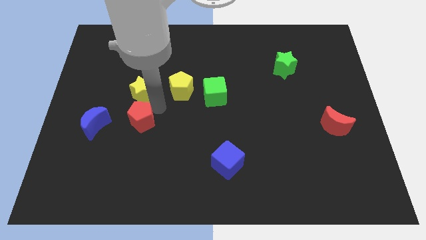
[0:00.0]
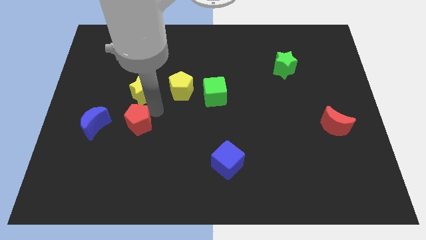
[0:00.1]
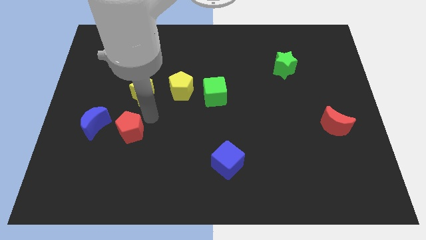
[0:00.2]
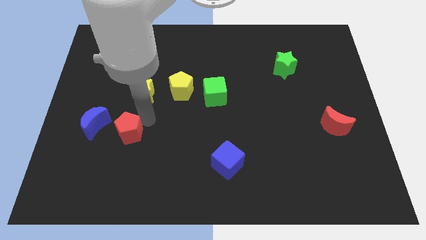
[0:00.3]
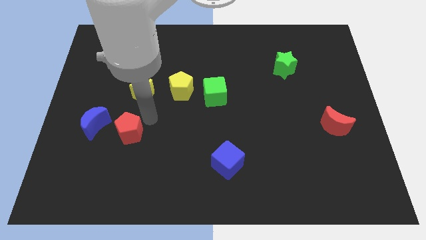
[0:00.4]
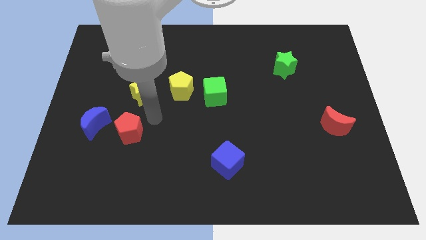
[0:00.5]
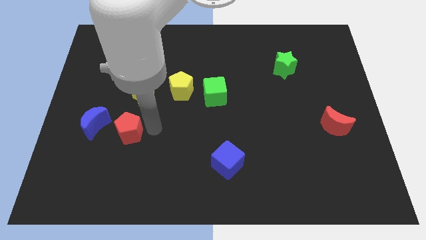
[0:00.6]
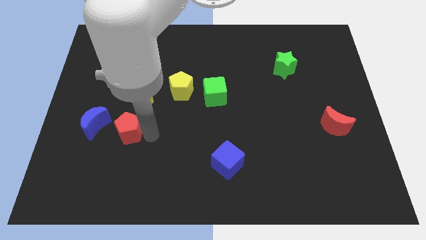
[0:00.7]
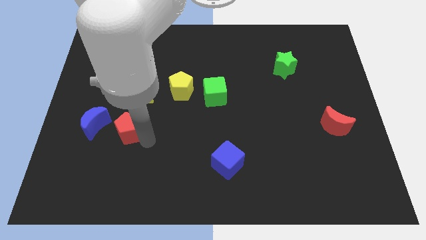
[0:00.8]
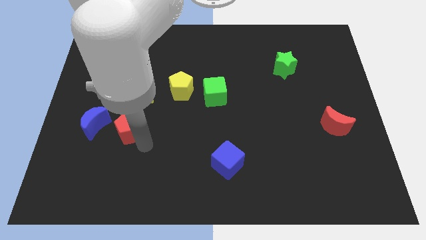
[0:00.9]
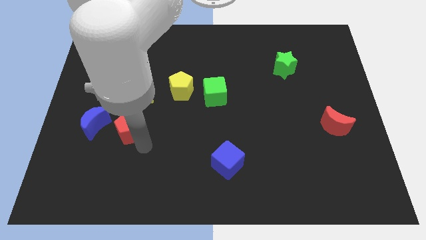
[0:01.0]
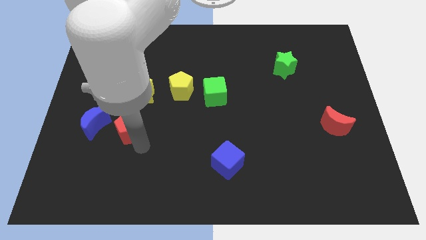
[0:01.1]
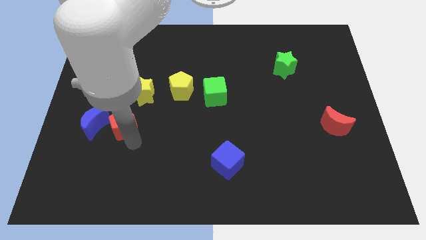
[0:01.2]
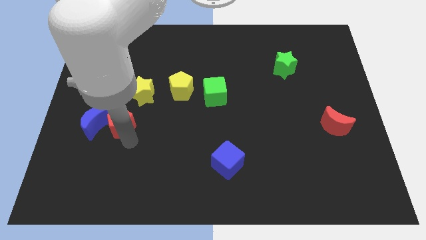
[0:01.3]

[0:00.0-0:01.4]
drag the red pentagon to the left

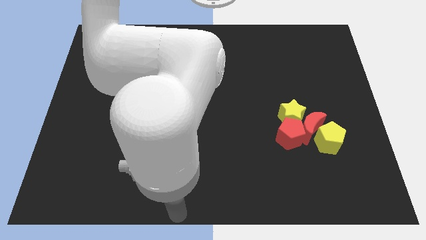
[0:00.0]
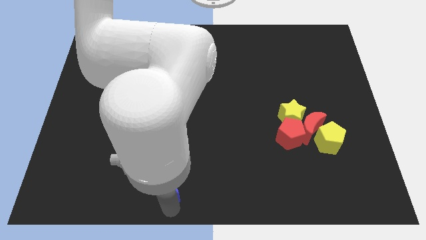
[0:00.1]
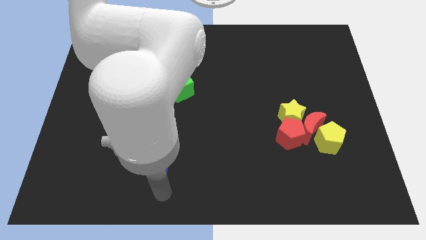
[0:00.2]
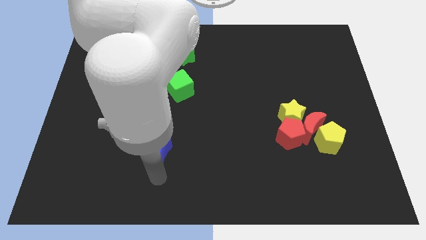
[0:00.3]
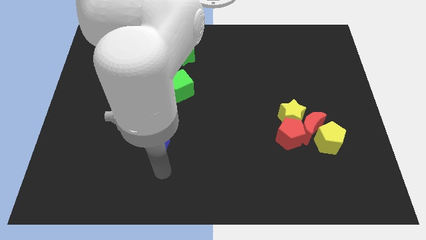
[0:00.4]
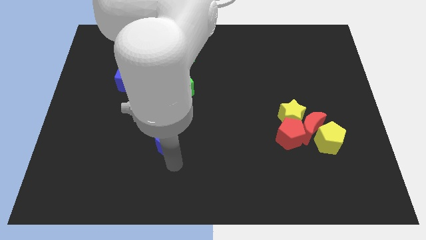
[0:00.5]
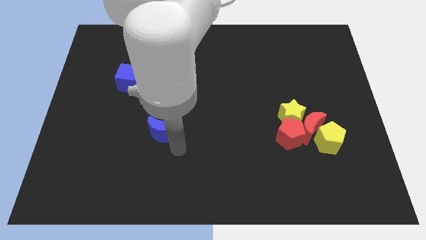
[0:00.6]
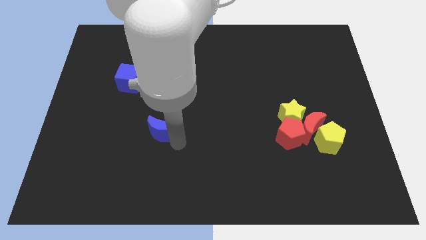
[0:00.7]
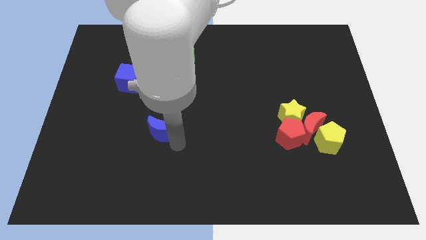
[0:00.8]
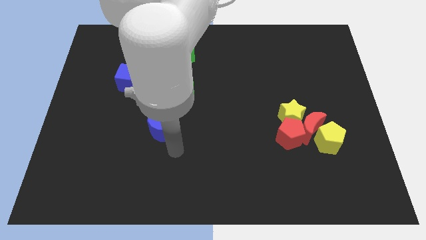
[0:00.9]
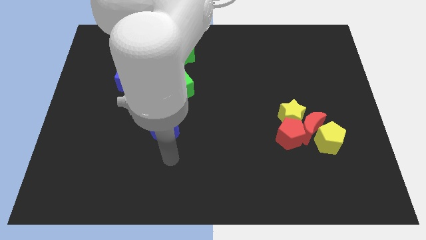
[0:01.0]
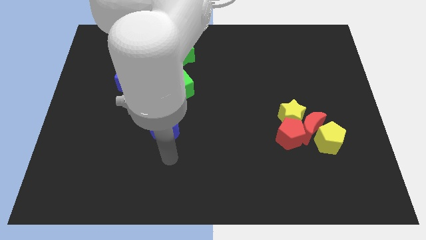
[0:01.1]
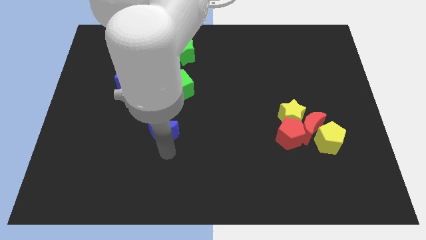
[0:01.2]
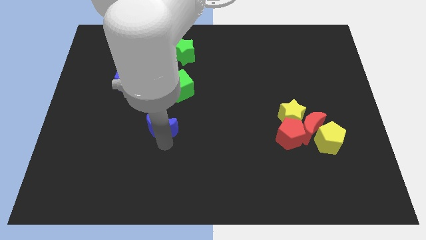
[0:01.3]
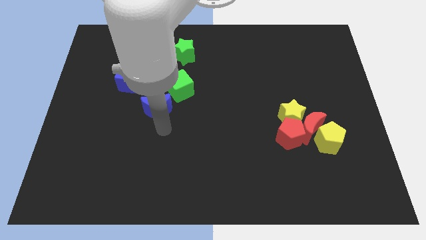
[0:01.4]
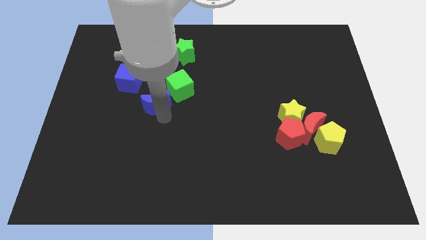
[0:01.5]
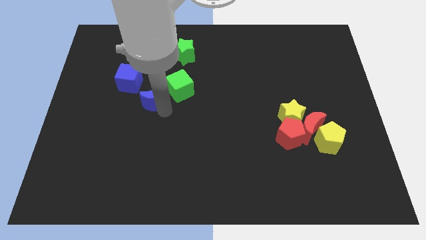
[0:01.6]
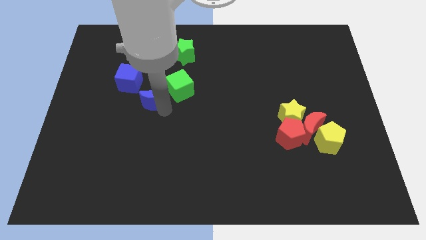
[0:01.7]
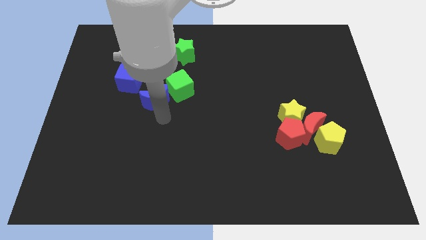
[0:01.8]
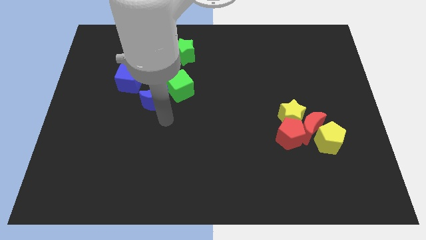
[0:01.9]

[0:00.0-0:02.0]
place the blue crescent to the left of green cube

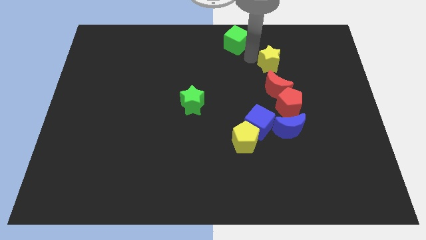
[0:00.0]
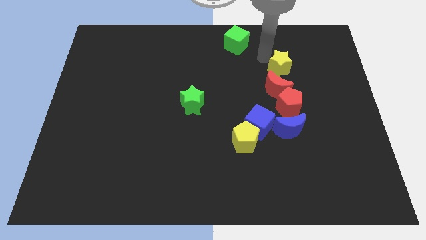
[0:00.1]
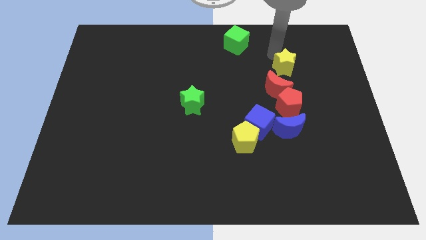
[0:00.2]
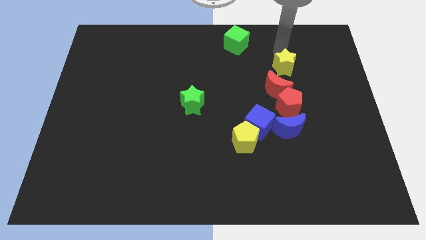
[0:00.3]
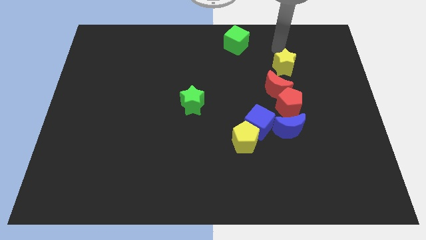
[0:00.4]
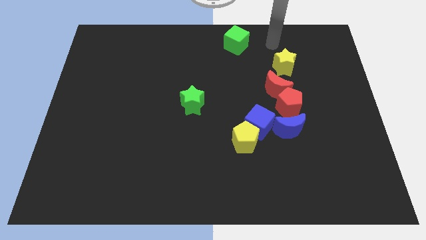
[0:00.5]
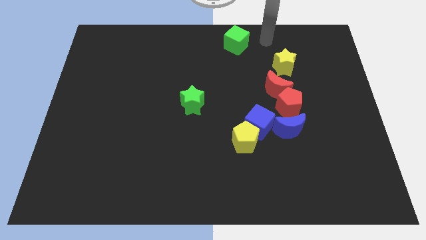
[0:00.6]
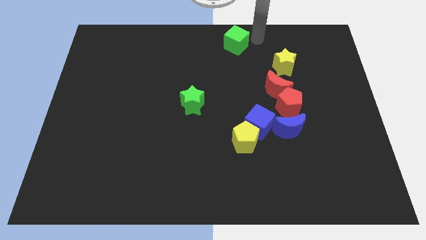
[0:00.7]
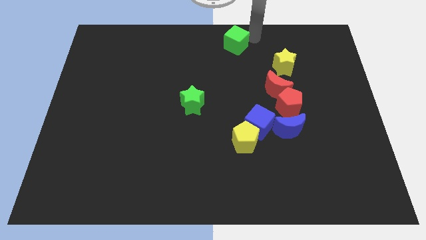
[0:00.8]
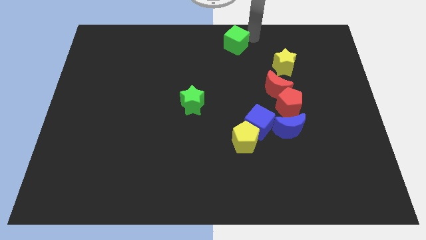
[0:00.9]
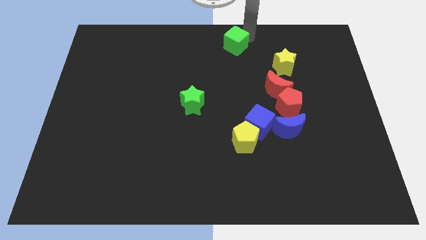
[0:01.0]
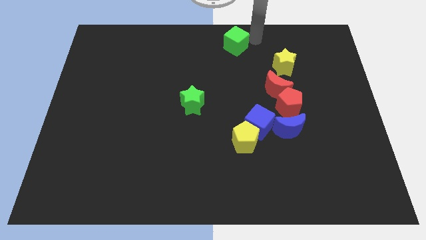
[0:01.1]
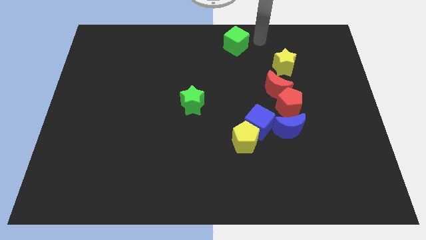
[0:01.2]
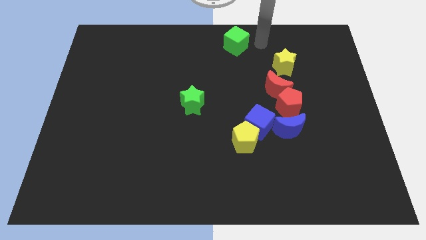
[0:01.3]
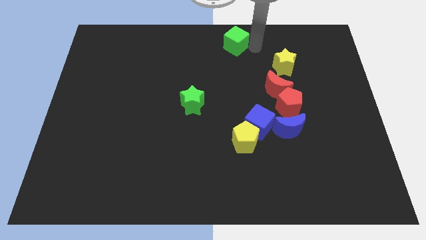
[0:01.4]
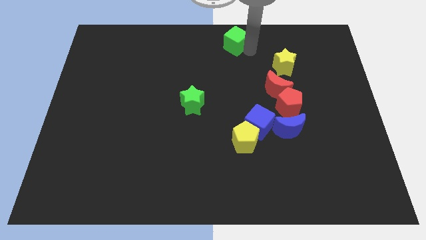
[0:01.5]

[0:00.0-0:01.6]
move your arm to the green cube

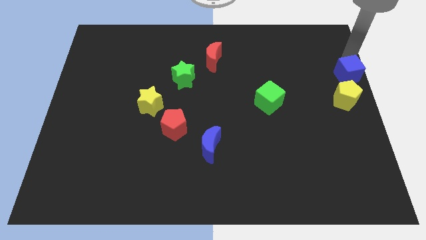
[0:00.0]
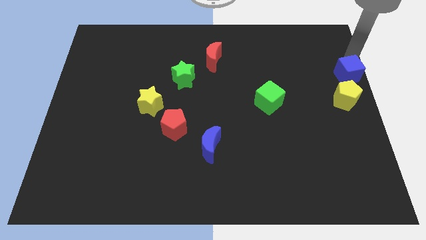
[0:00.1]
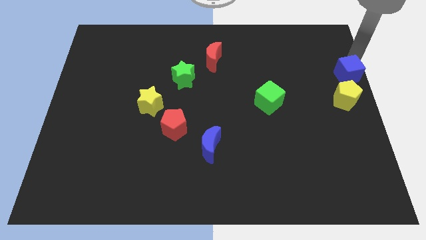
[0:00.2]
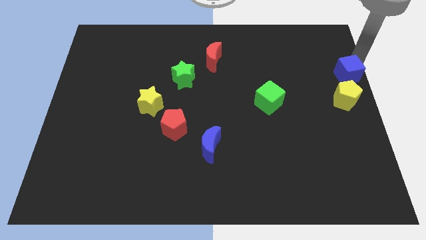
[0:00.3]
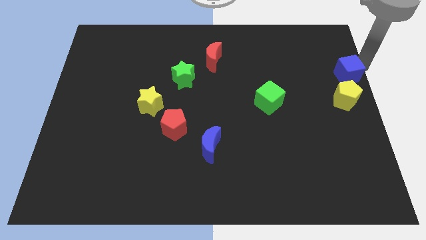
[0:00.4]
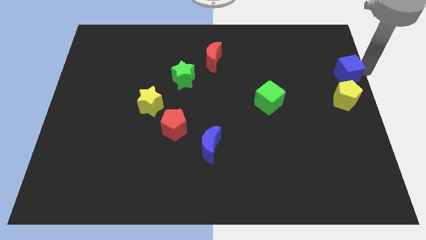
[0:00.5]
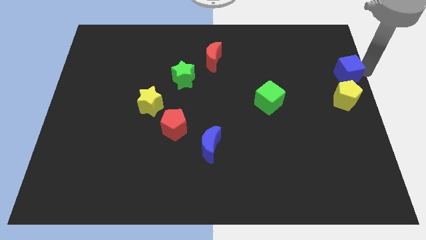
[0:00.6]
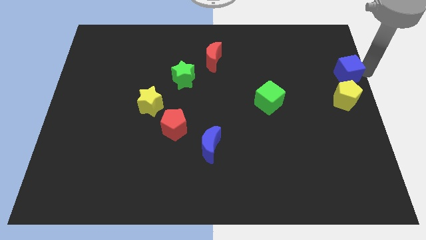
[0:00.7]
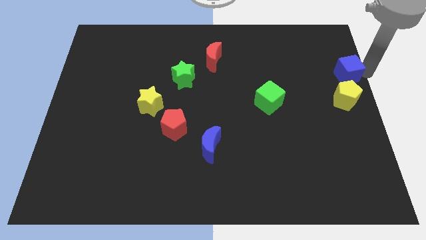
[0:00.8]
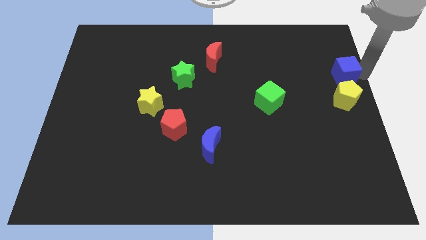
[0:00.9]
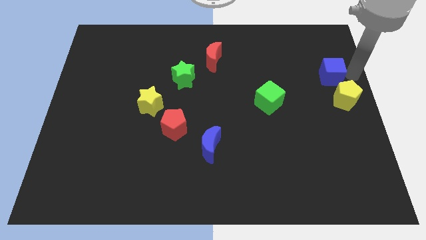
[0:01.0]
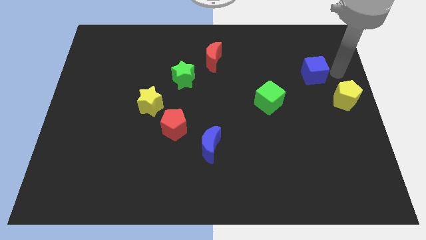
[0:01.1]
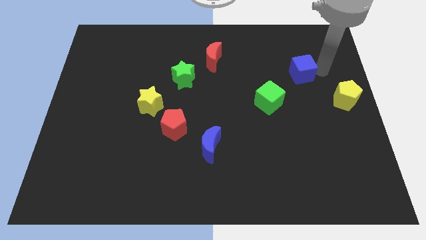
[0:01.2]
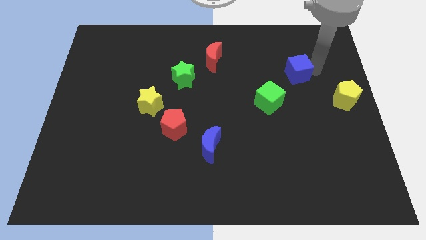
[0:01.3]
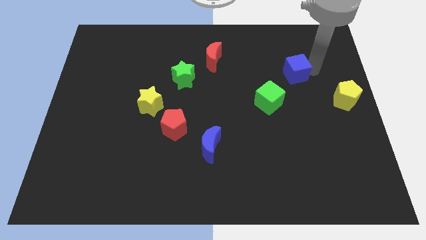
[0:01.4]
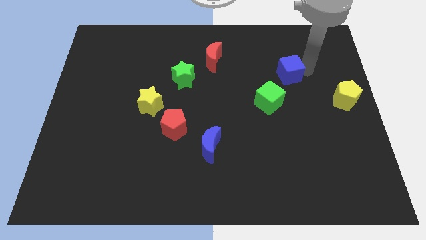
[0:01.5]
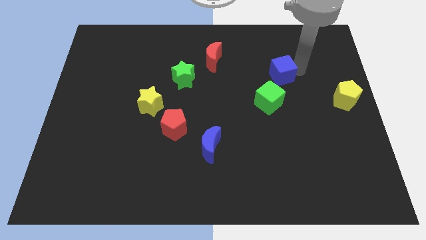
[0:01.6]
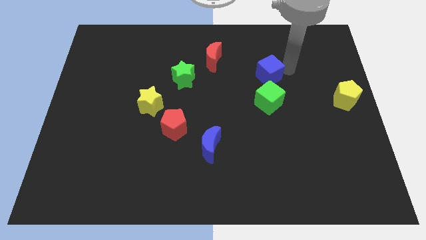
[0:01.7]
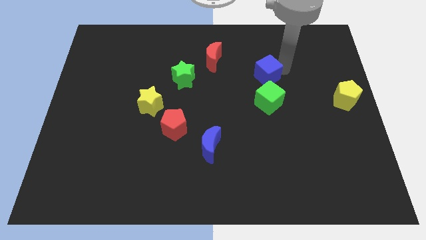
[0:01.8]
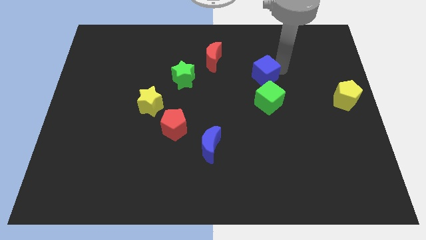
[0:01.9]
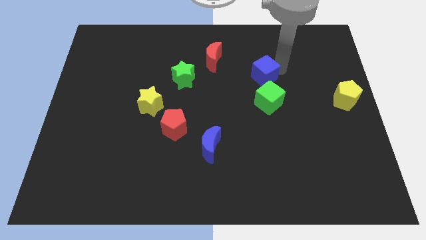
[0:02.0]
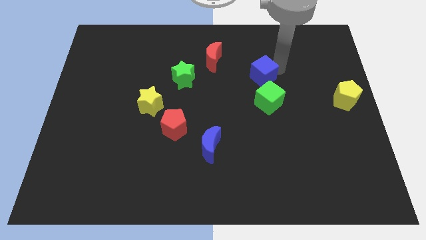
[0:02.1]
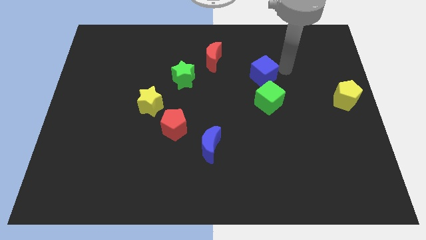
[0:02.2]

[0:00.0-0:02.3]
push the blue cube to the top of the green cube

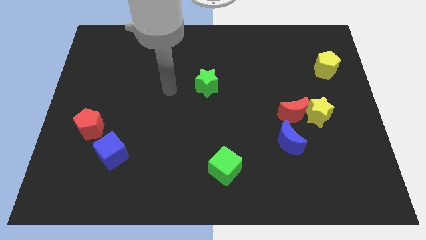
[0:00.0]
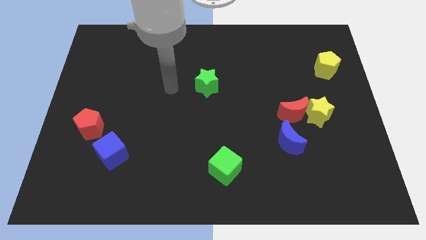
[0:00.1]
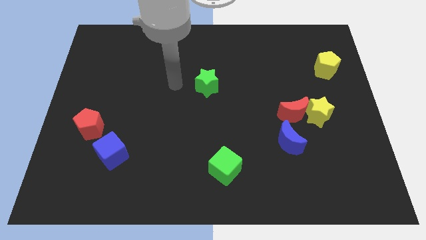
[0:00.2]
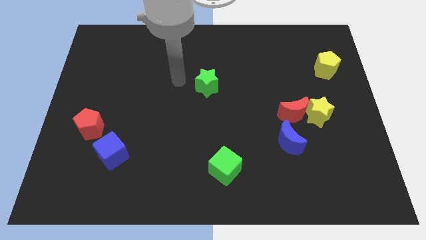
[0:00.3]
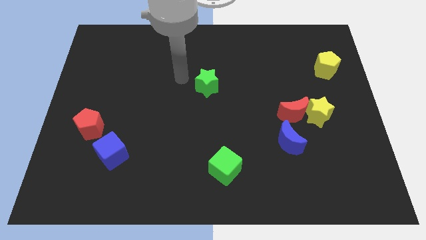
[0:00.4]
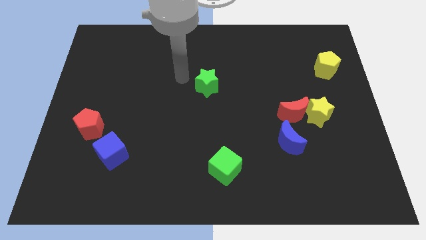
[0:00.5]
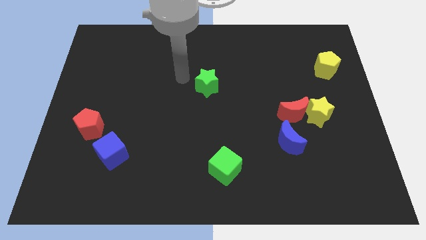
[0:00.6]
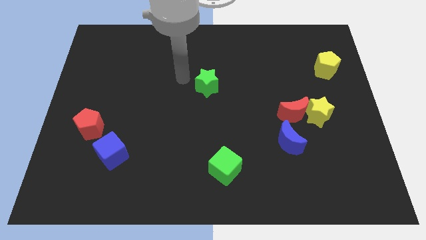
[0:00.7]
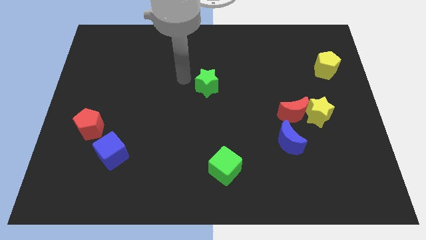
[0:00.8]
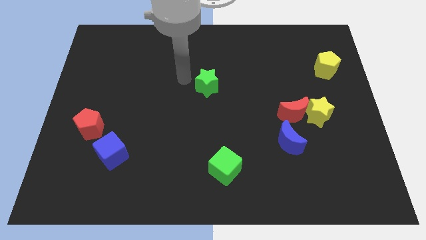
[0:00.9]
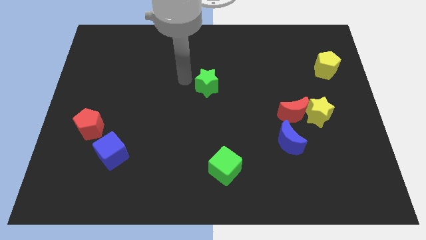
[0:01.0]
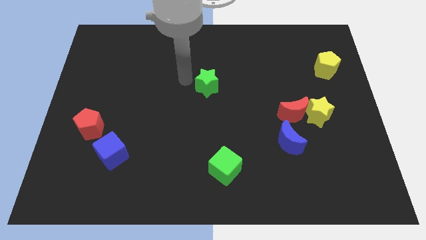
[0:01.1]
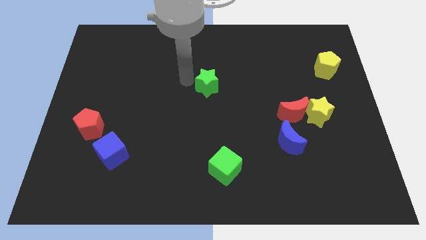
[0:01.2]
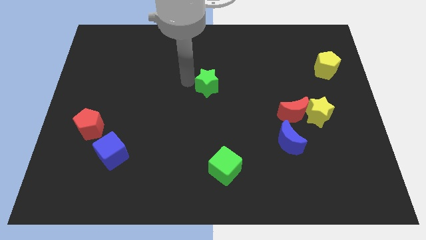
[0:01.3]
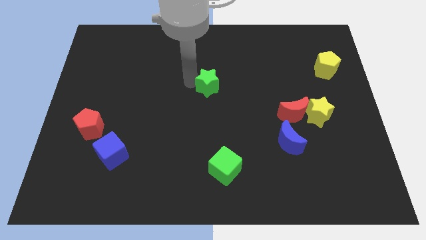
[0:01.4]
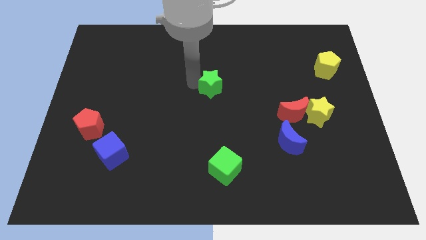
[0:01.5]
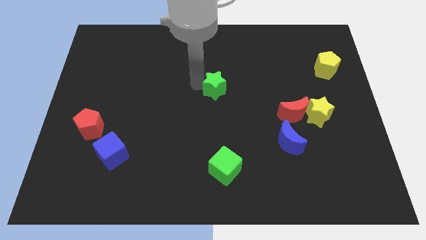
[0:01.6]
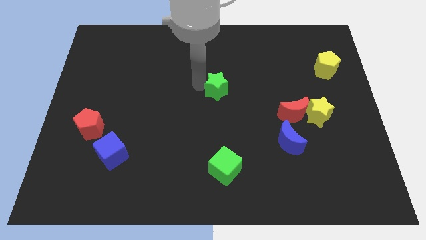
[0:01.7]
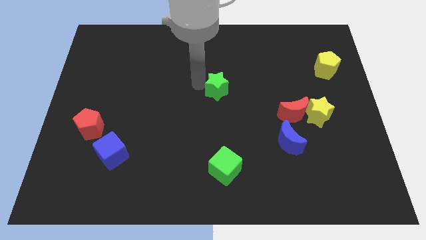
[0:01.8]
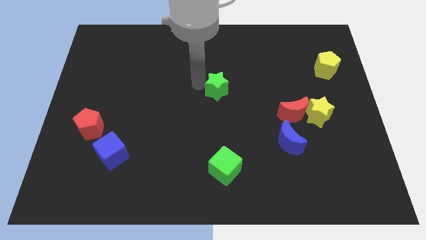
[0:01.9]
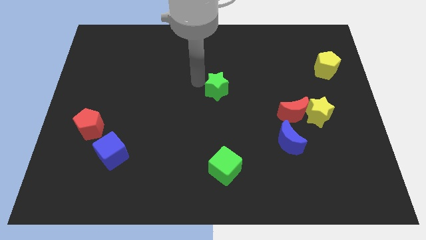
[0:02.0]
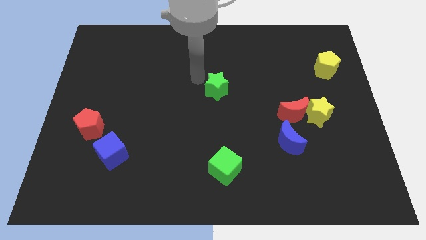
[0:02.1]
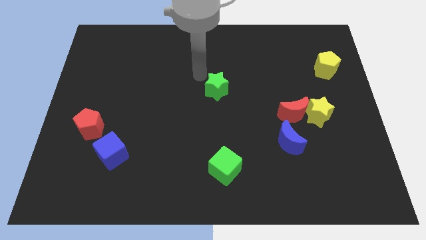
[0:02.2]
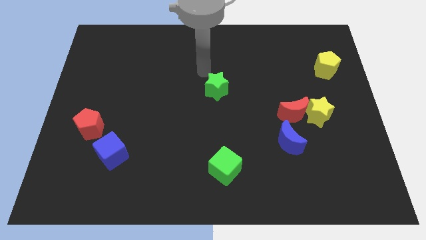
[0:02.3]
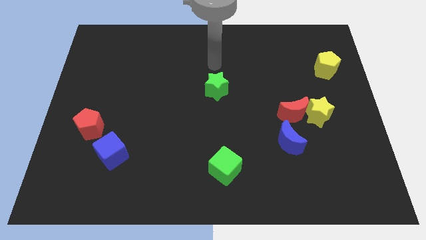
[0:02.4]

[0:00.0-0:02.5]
slightly push the green star to the right
